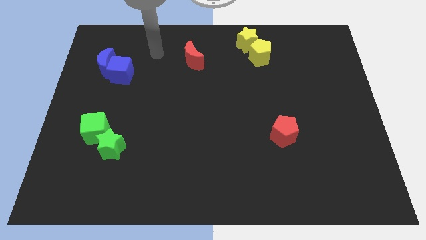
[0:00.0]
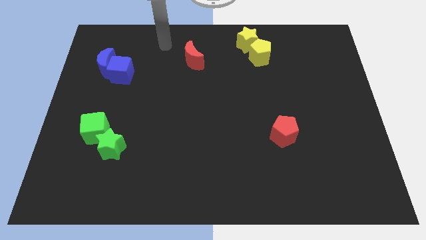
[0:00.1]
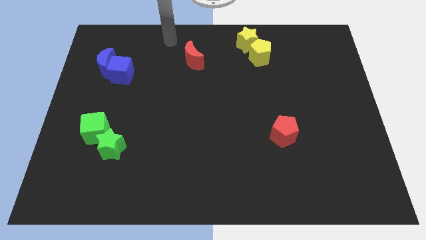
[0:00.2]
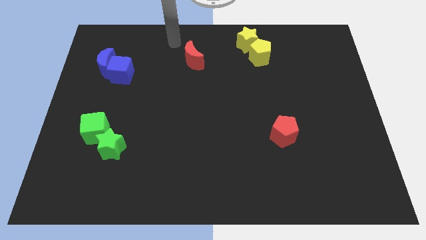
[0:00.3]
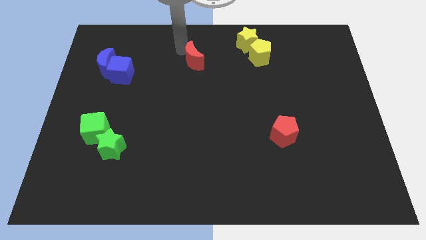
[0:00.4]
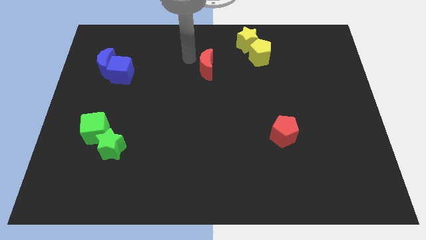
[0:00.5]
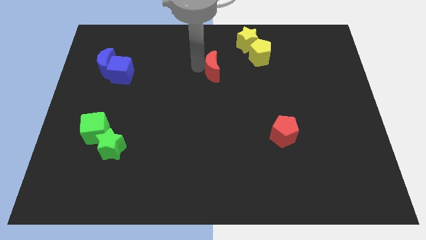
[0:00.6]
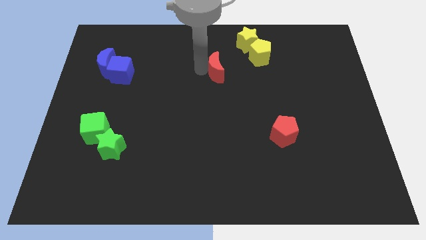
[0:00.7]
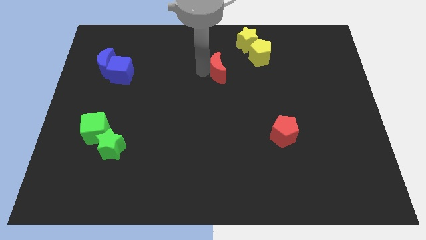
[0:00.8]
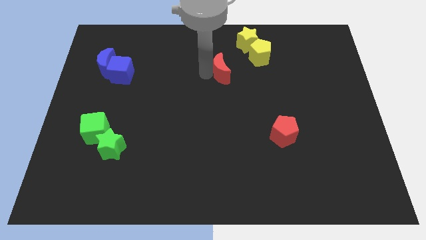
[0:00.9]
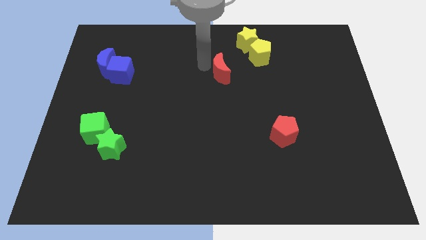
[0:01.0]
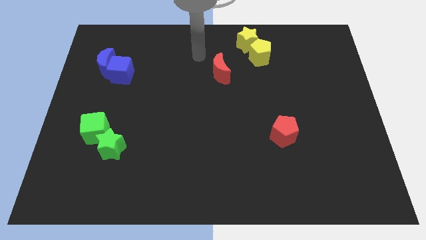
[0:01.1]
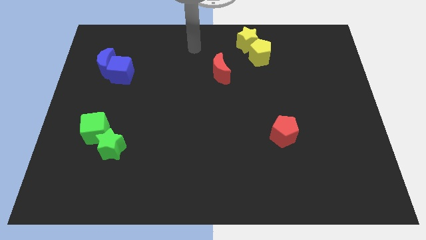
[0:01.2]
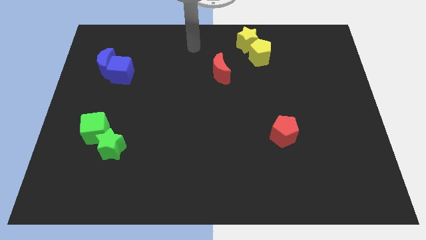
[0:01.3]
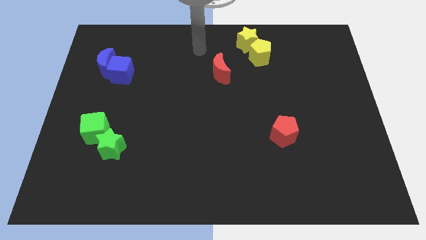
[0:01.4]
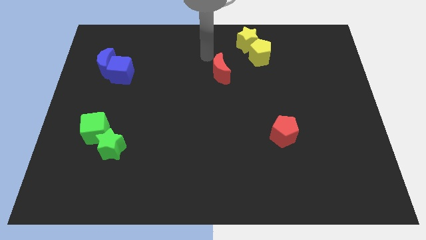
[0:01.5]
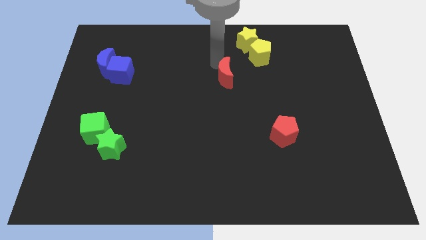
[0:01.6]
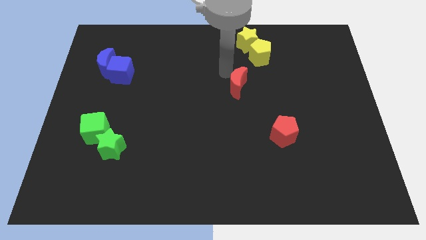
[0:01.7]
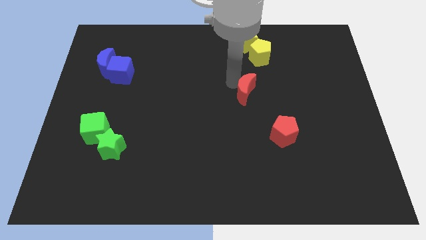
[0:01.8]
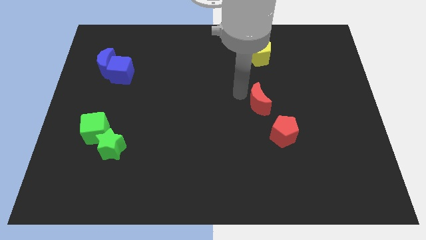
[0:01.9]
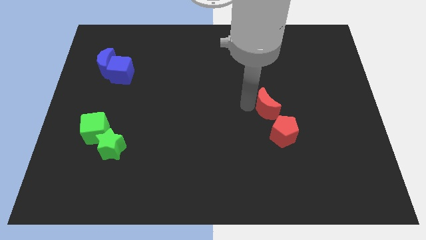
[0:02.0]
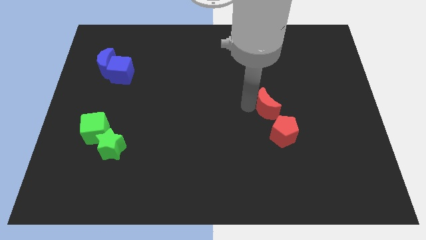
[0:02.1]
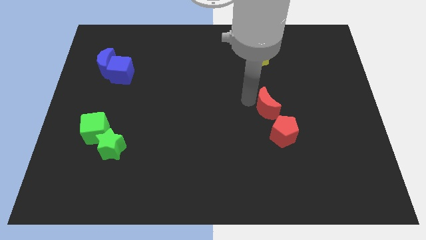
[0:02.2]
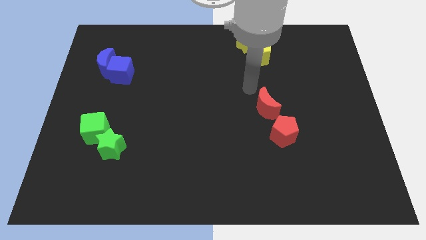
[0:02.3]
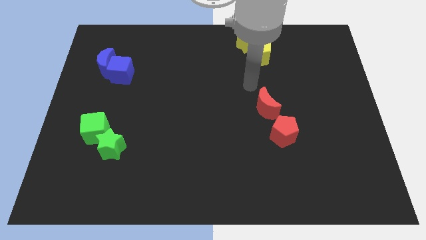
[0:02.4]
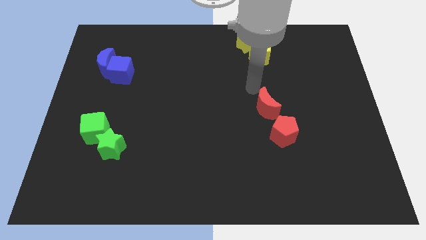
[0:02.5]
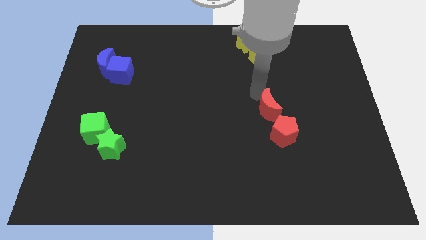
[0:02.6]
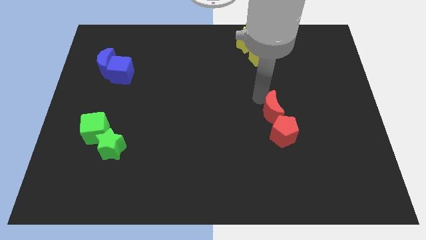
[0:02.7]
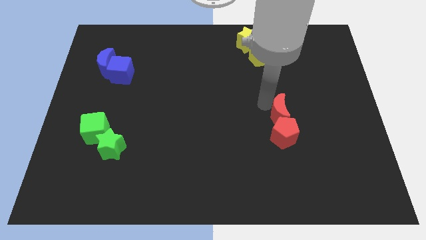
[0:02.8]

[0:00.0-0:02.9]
push the red crescent to the top of the red pentagon

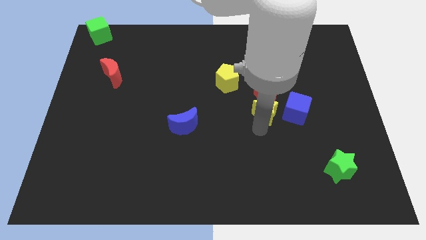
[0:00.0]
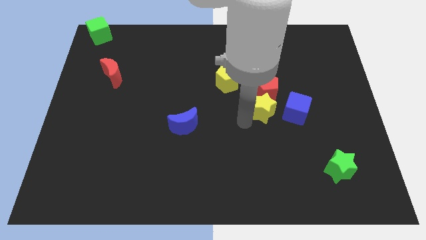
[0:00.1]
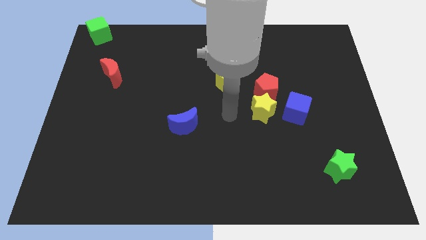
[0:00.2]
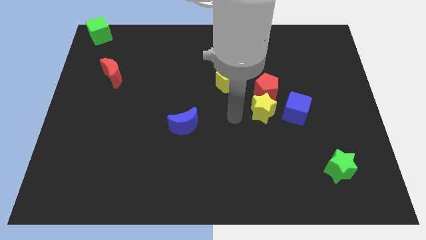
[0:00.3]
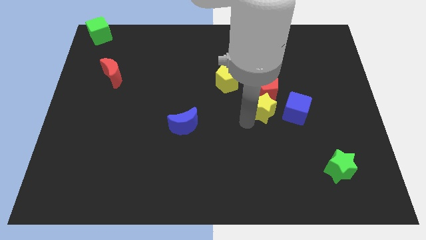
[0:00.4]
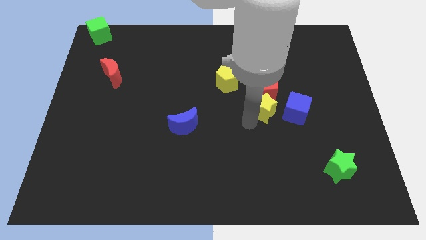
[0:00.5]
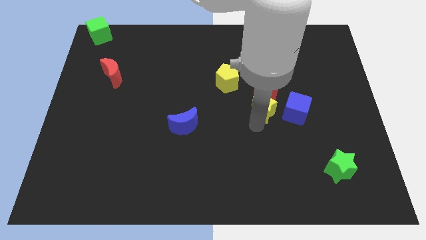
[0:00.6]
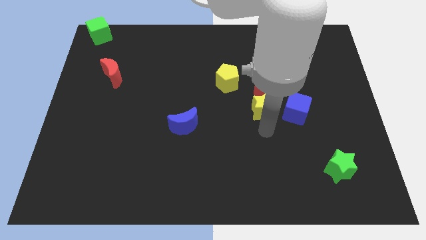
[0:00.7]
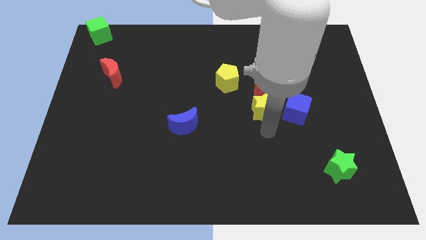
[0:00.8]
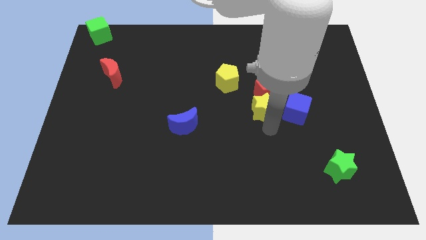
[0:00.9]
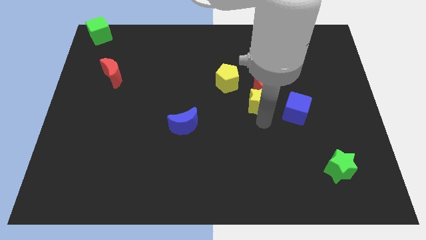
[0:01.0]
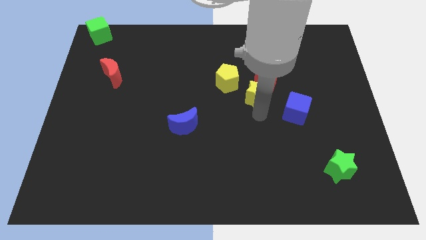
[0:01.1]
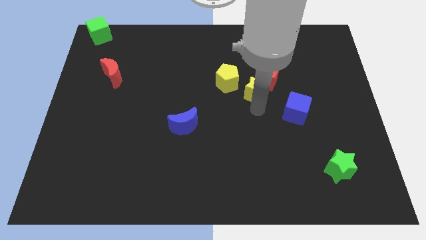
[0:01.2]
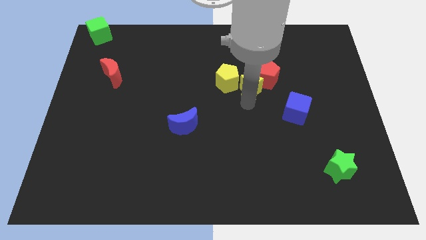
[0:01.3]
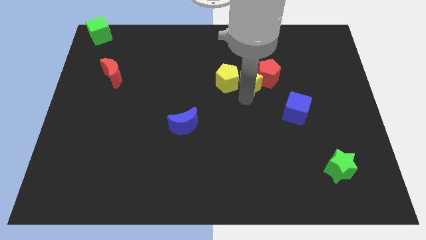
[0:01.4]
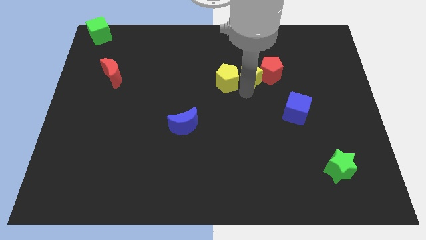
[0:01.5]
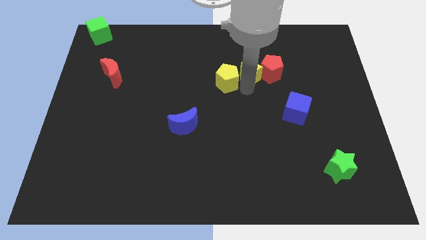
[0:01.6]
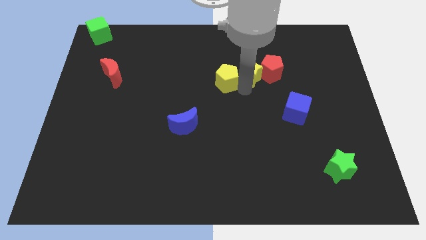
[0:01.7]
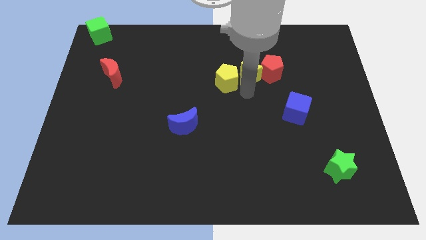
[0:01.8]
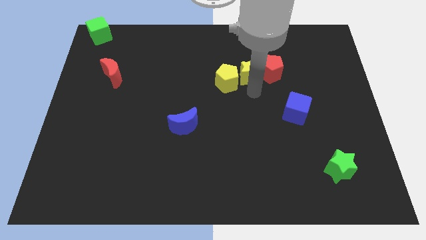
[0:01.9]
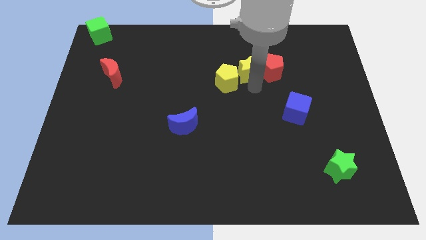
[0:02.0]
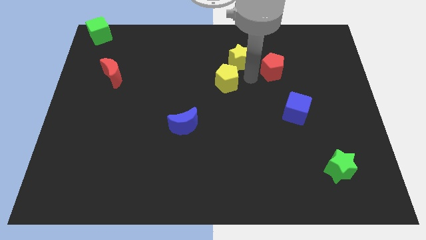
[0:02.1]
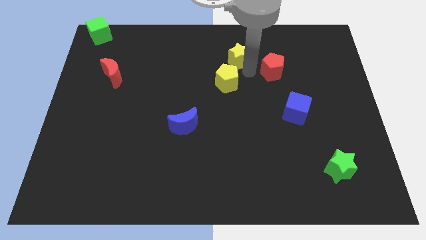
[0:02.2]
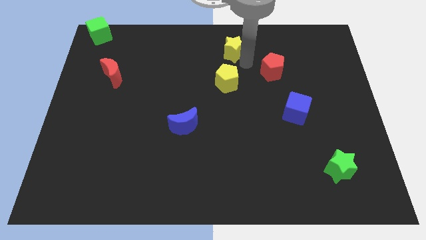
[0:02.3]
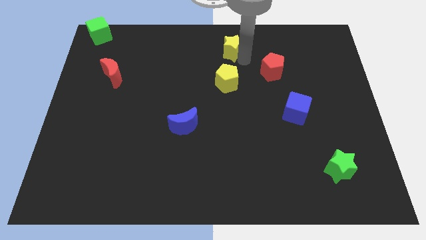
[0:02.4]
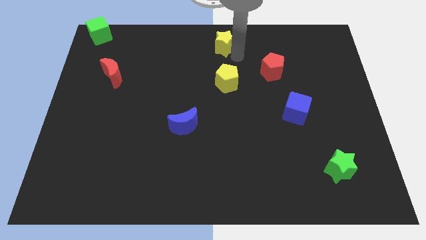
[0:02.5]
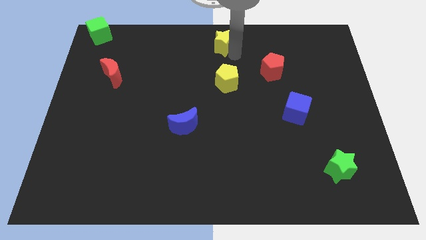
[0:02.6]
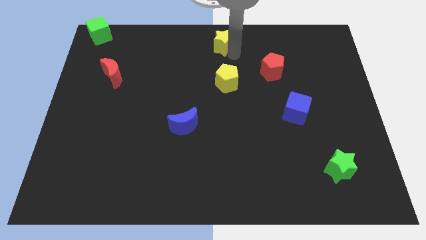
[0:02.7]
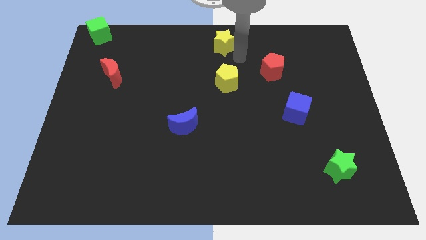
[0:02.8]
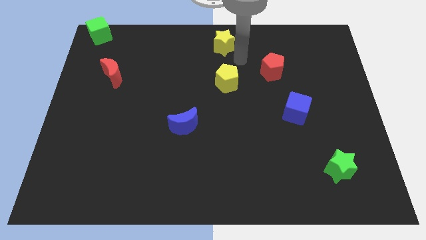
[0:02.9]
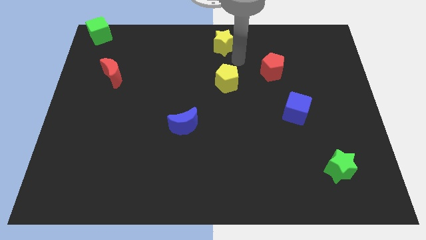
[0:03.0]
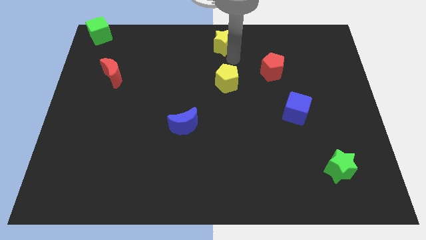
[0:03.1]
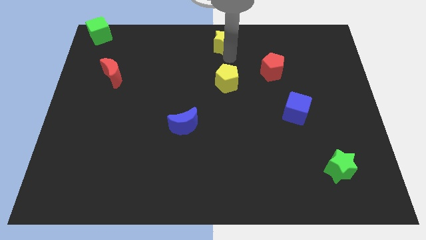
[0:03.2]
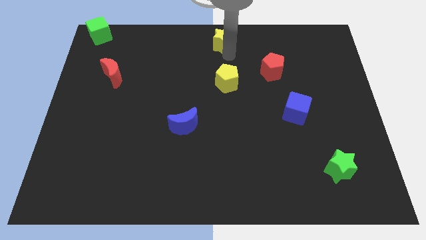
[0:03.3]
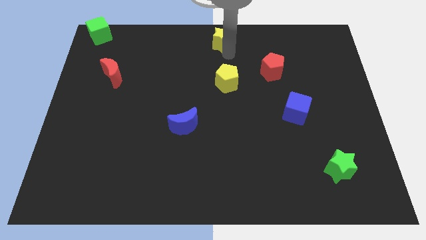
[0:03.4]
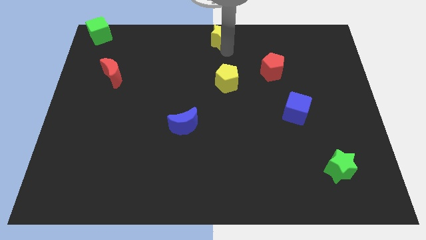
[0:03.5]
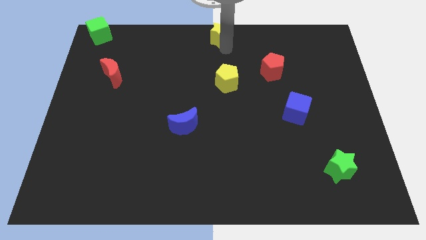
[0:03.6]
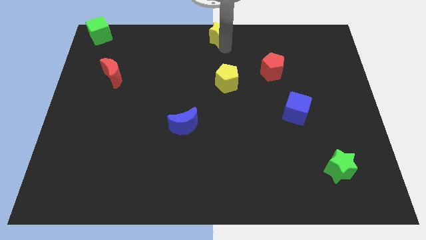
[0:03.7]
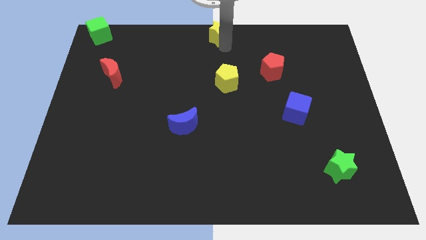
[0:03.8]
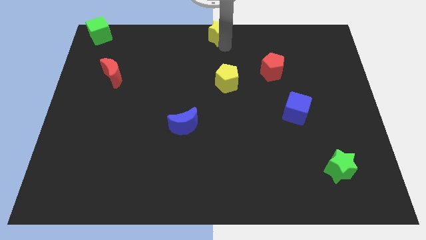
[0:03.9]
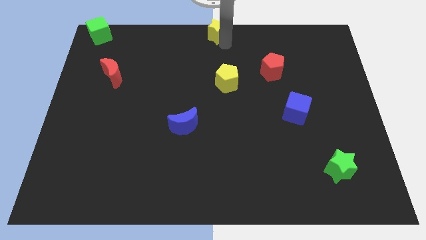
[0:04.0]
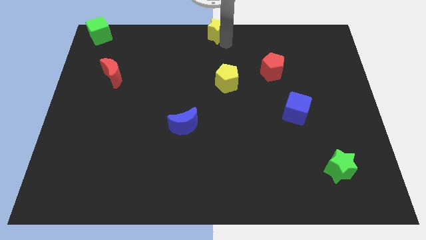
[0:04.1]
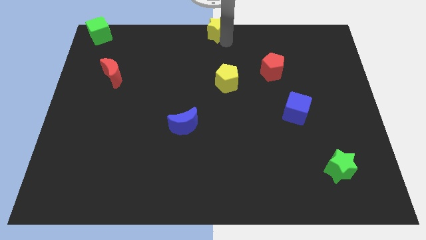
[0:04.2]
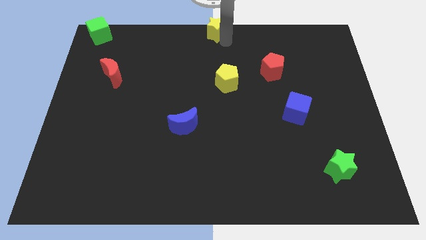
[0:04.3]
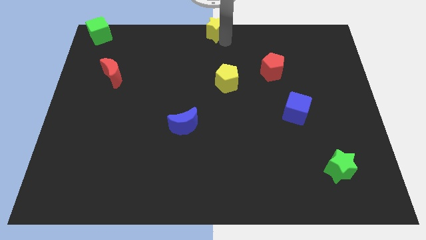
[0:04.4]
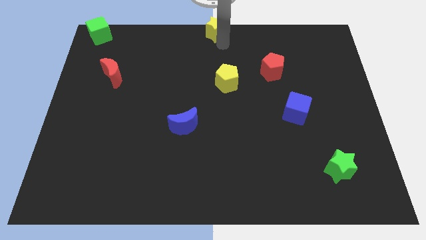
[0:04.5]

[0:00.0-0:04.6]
move yellow star at the top center of the board

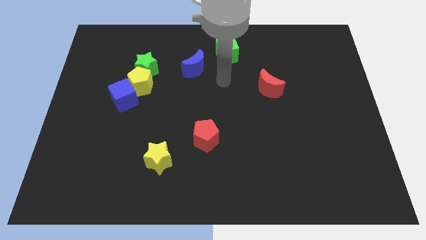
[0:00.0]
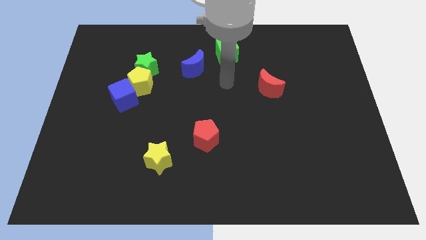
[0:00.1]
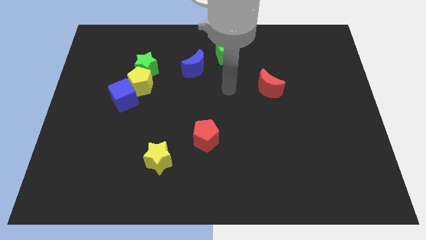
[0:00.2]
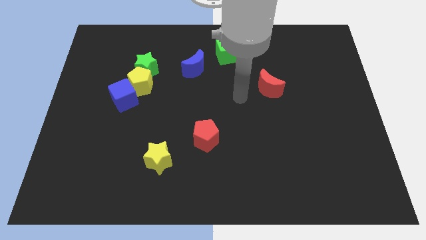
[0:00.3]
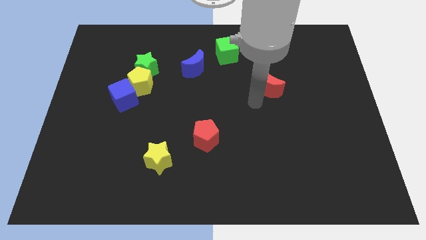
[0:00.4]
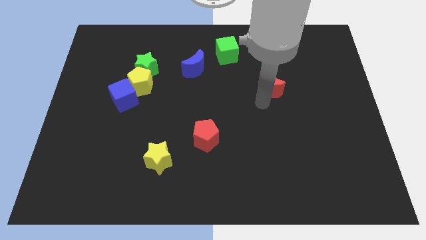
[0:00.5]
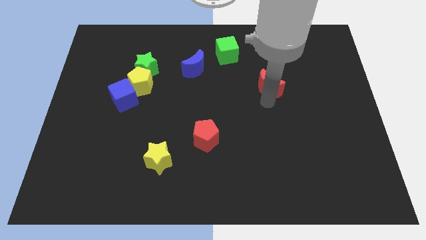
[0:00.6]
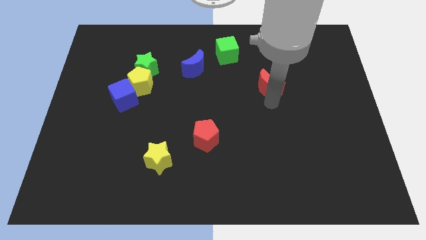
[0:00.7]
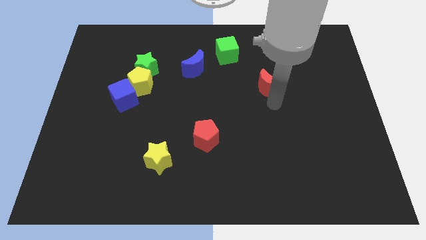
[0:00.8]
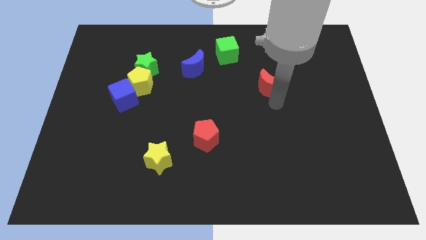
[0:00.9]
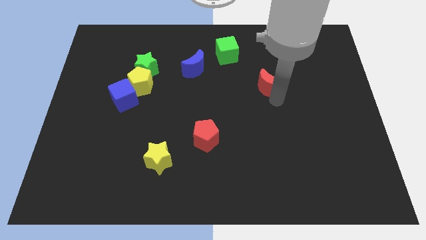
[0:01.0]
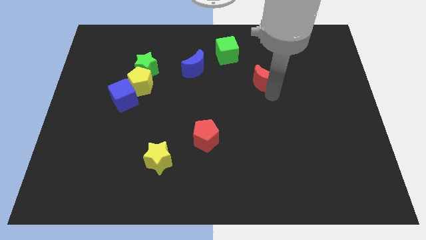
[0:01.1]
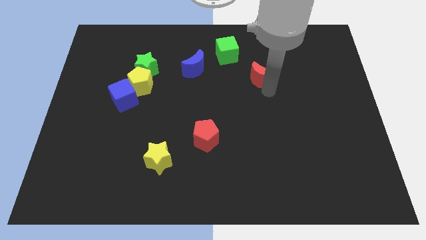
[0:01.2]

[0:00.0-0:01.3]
push the red moon upwards slightly

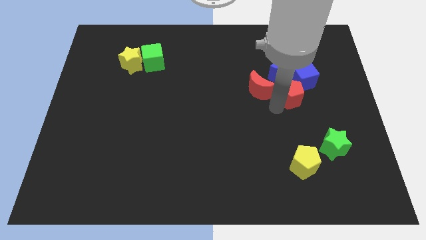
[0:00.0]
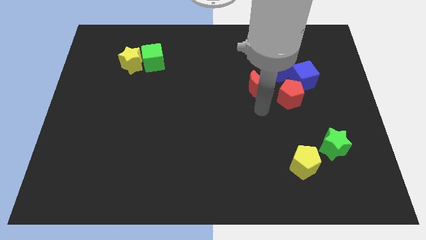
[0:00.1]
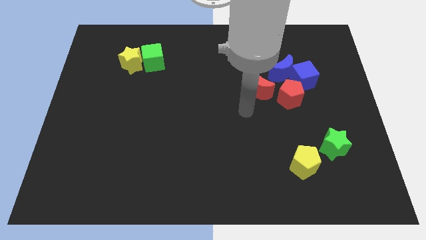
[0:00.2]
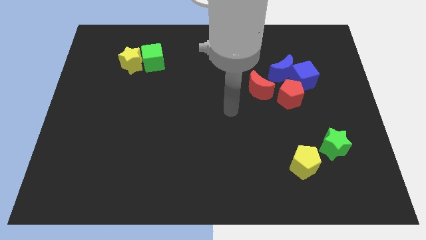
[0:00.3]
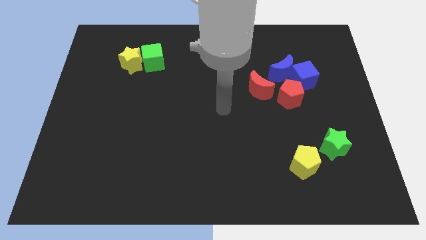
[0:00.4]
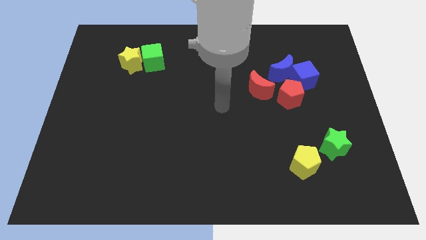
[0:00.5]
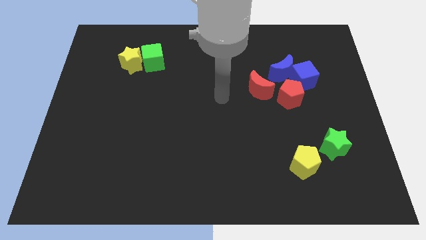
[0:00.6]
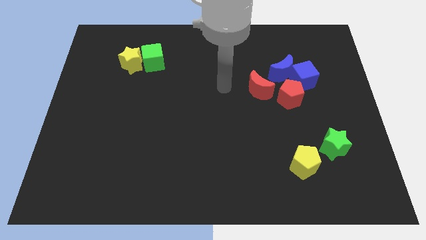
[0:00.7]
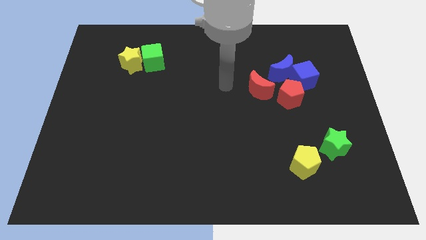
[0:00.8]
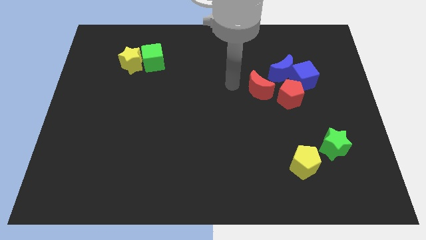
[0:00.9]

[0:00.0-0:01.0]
move away from the red pentagon
